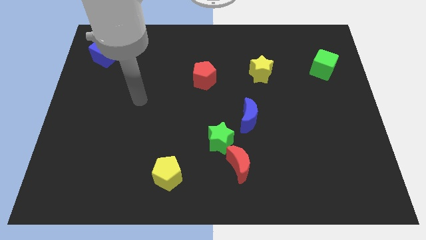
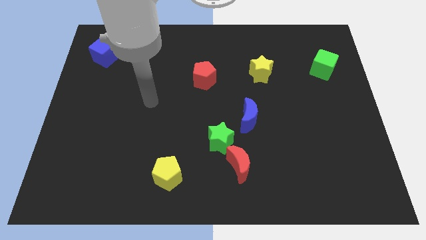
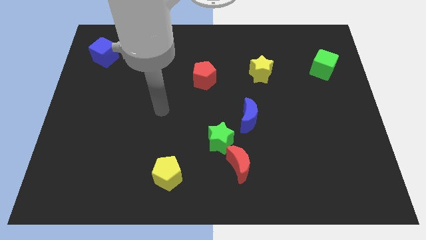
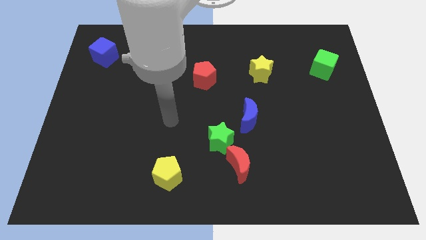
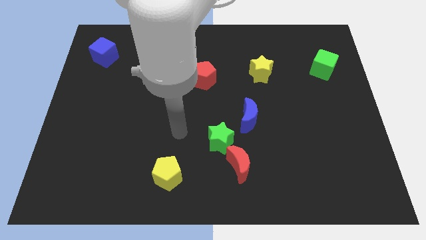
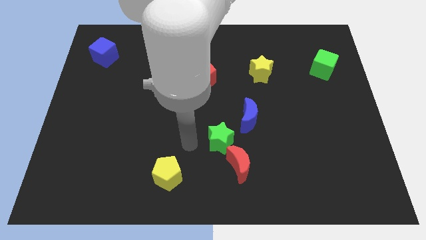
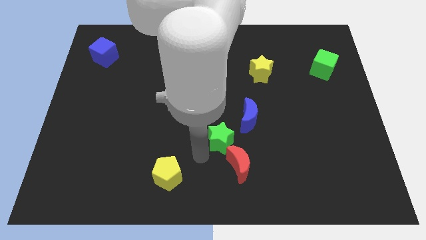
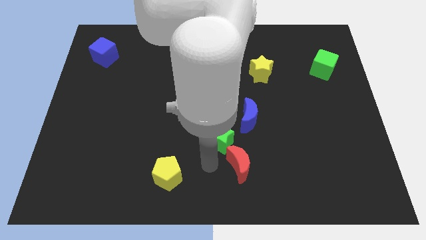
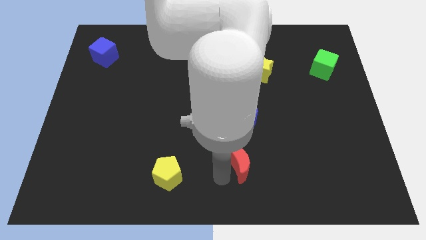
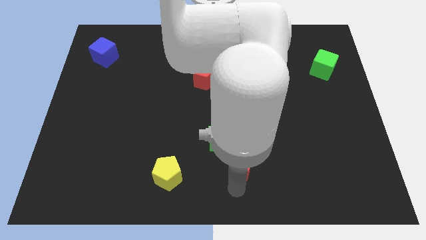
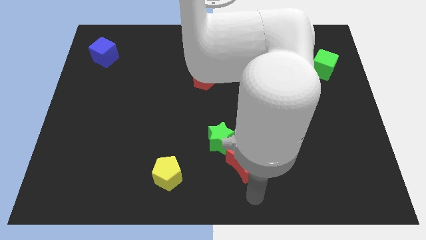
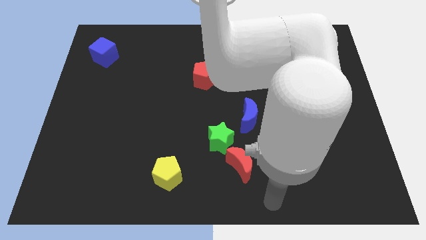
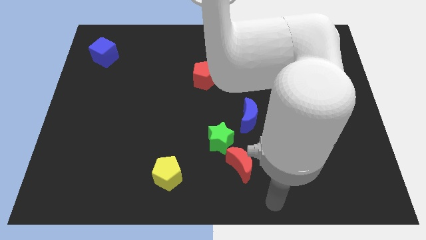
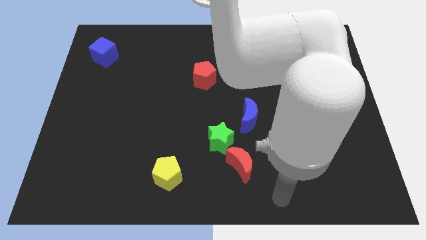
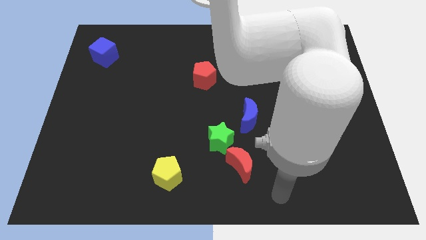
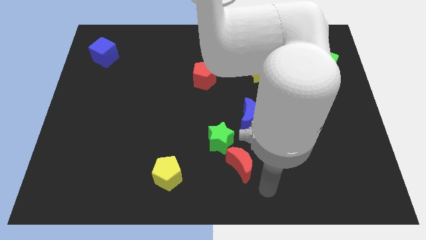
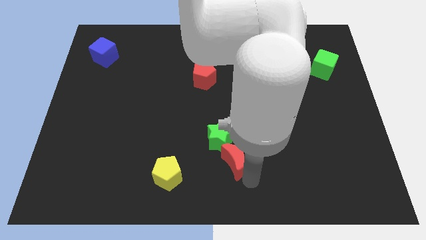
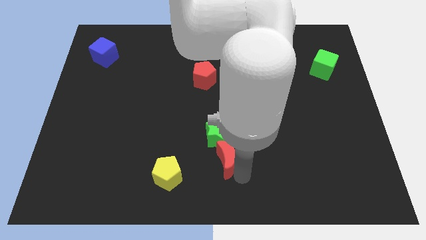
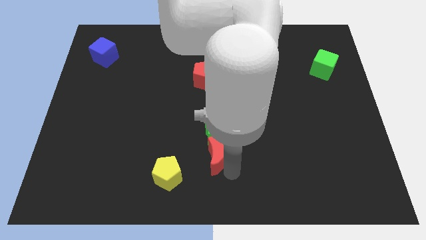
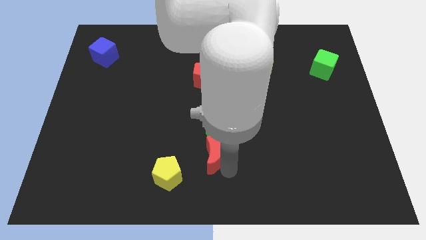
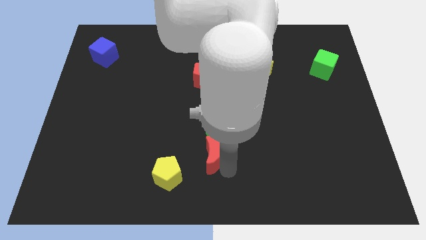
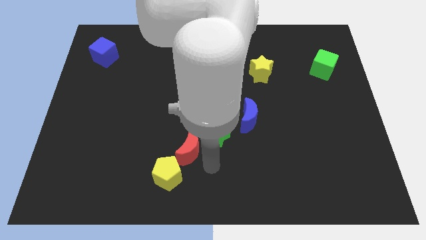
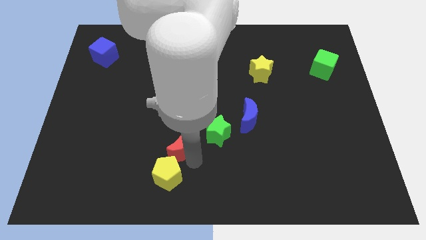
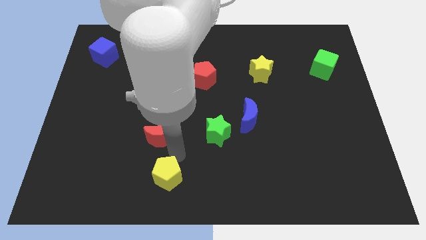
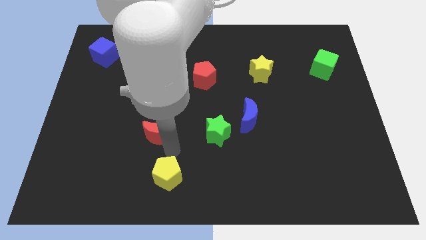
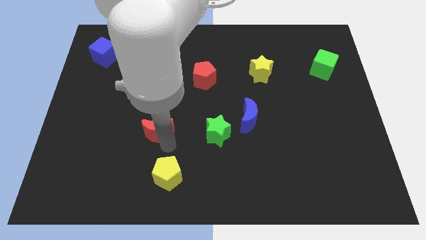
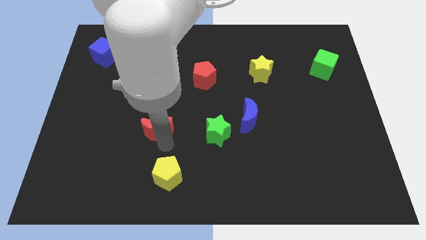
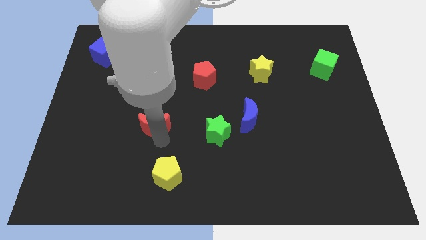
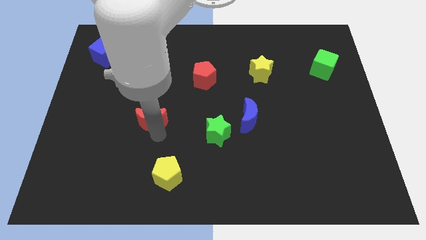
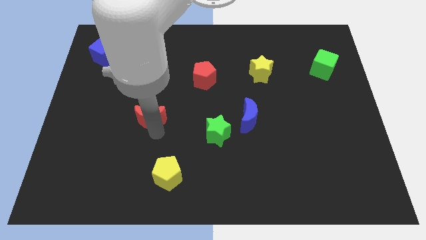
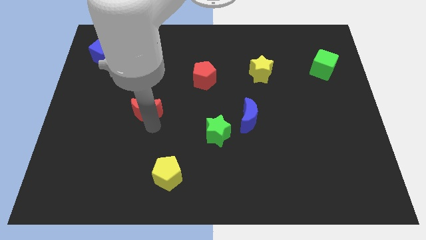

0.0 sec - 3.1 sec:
separate red moon and the green star

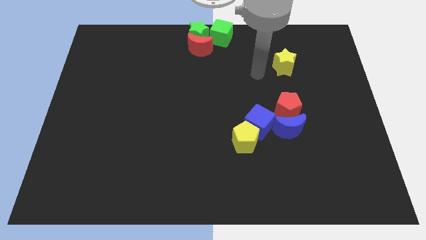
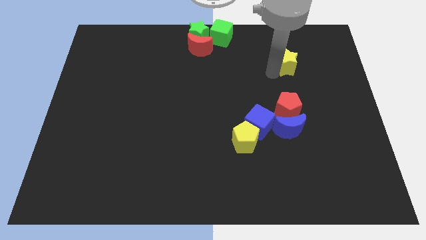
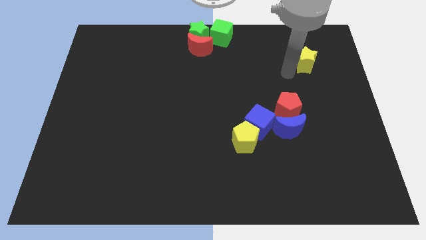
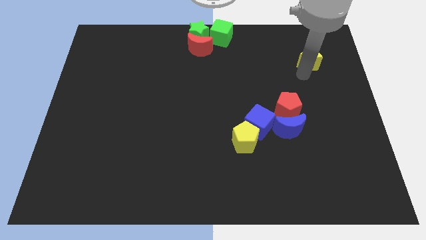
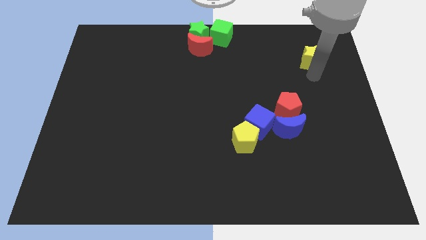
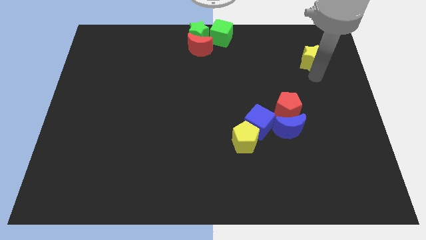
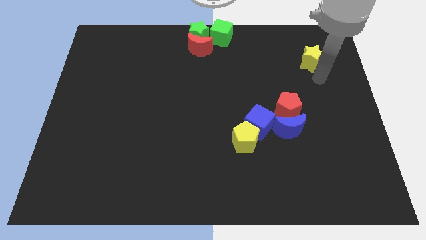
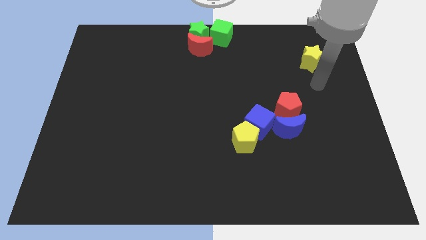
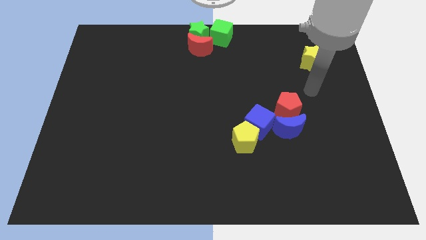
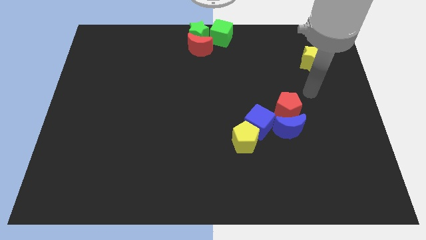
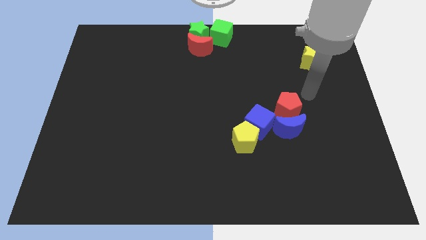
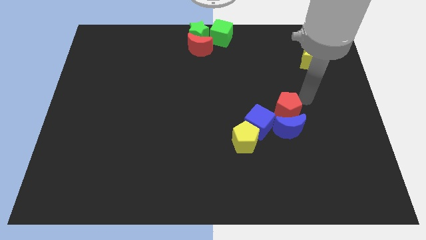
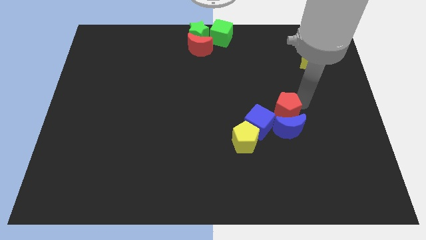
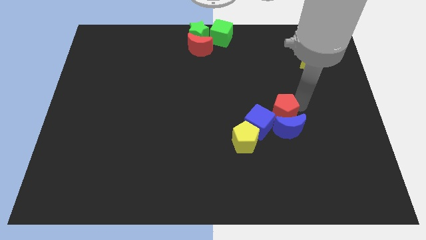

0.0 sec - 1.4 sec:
move the red pentagon to the center of the board

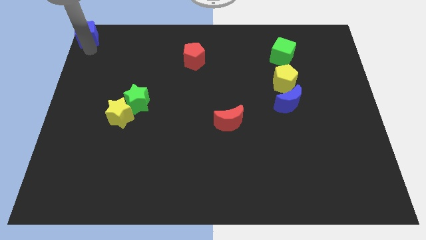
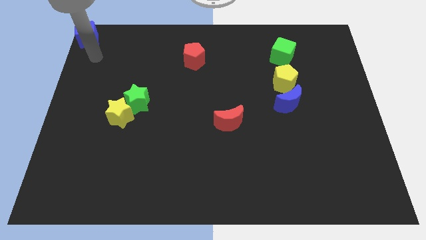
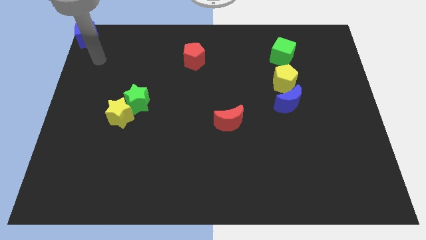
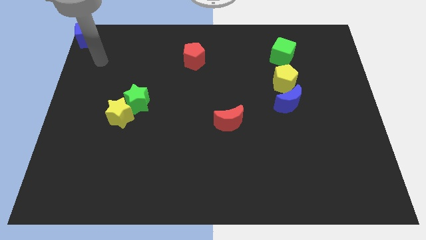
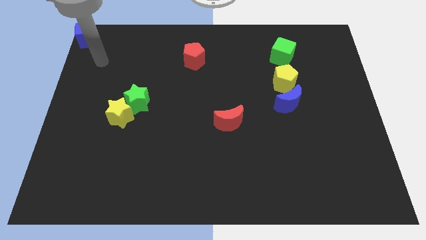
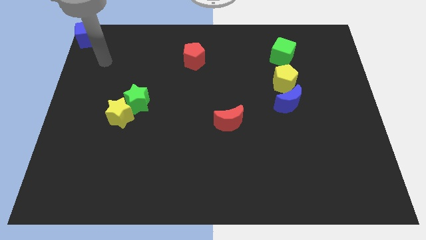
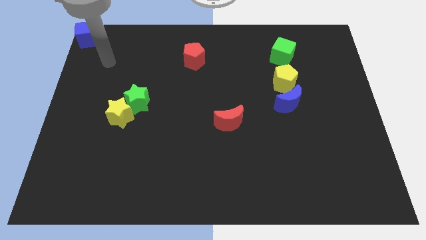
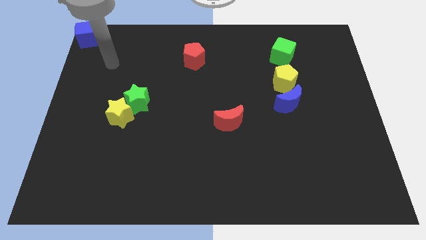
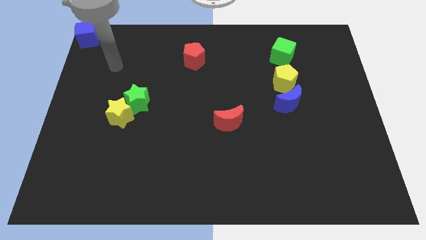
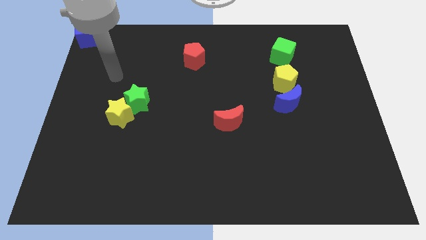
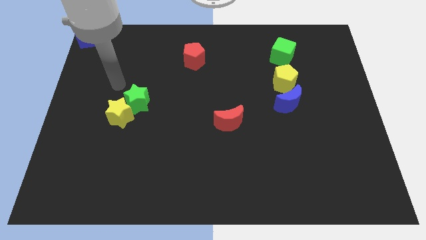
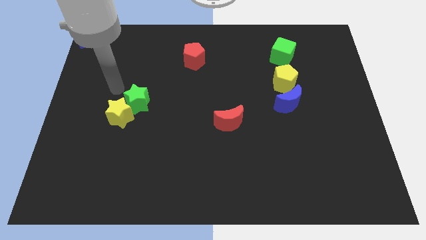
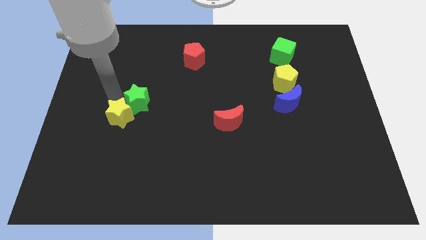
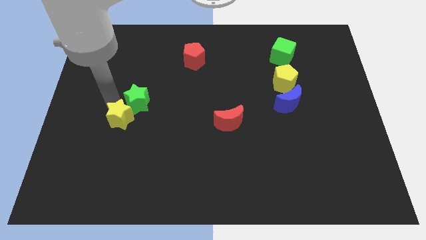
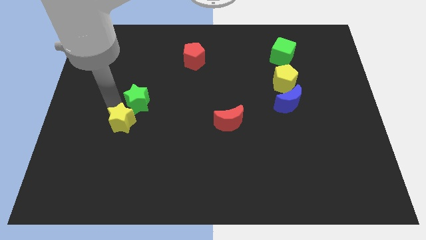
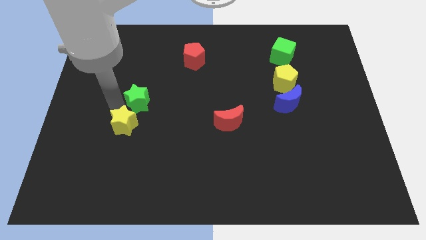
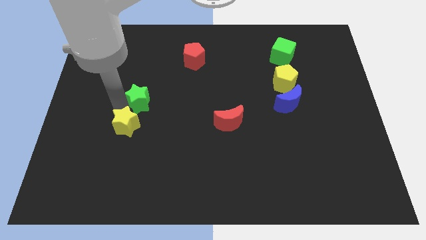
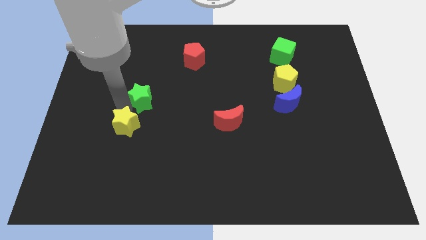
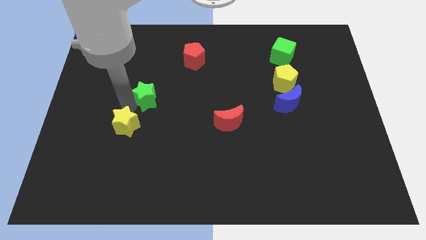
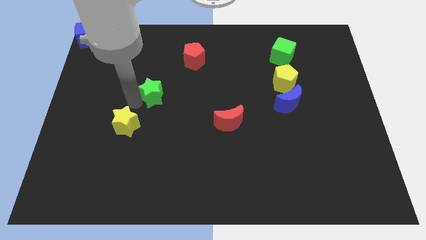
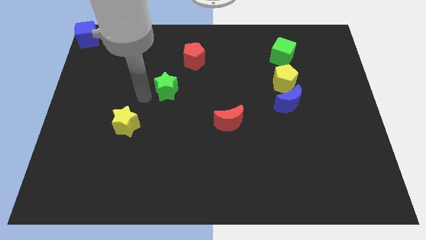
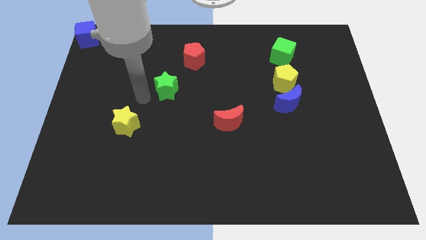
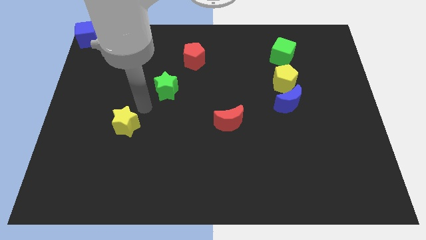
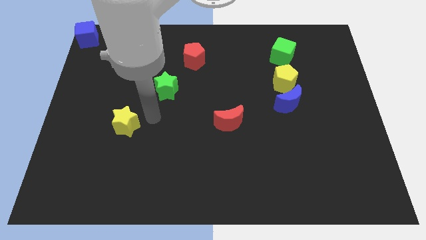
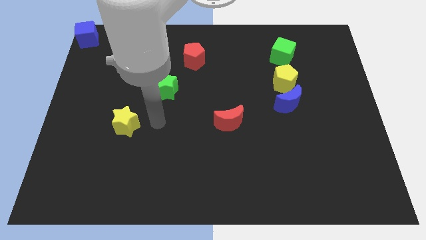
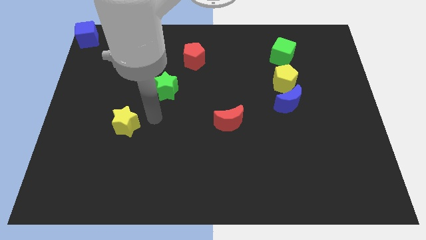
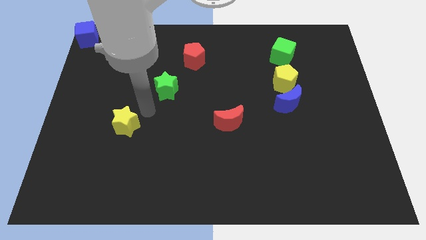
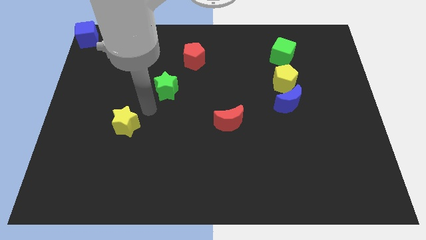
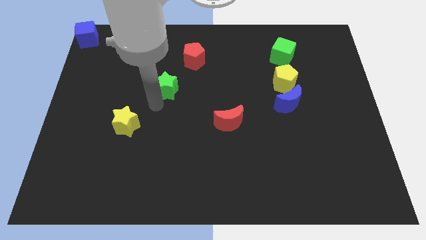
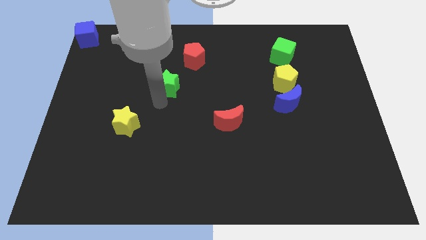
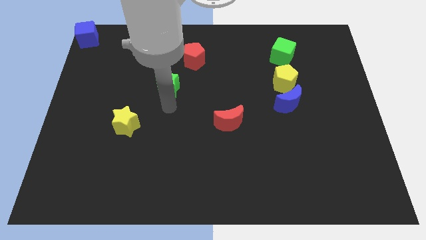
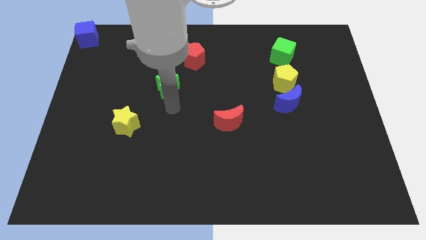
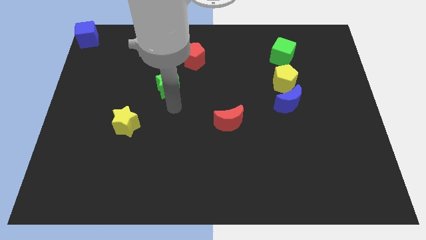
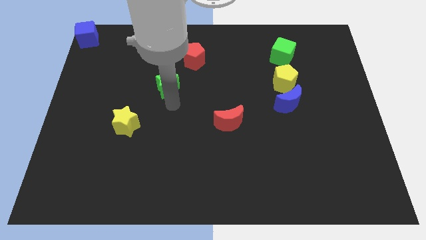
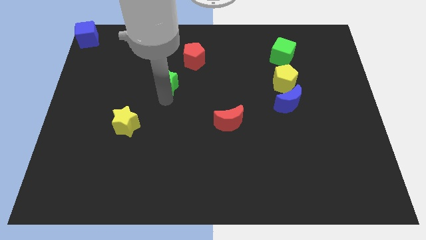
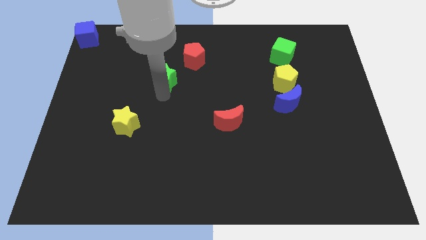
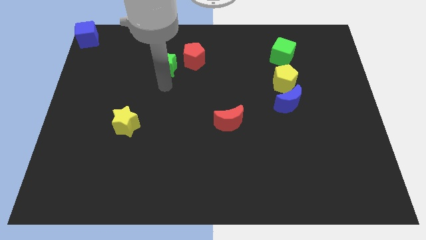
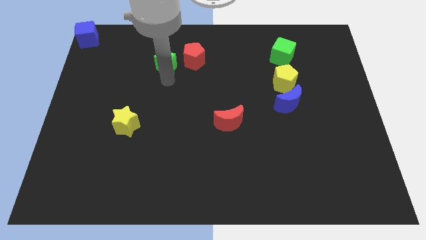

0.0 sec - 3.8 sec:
separate the yellow star and green star

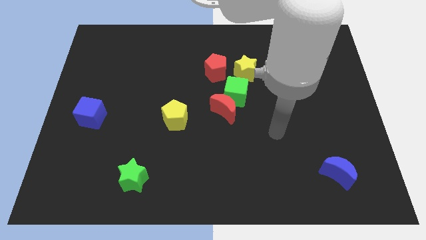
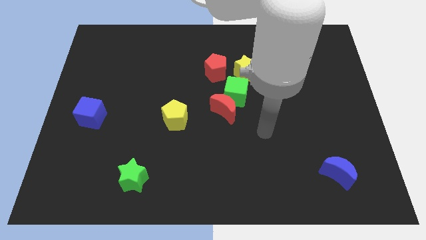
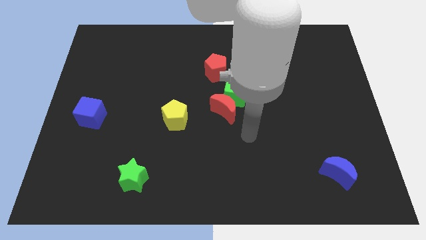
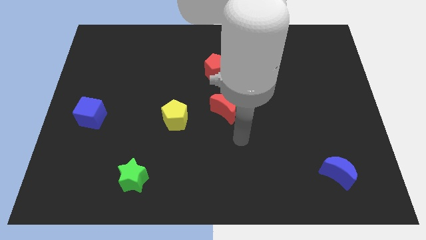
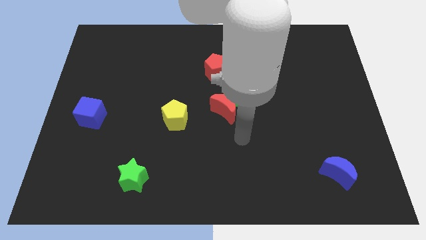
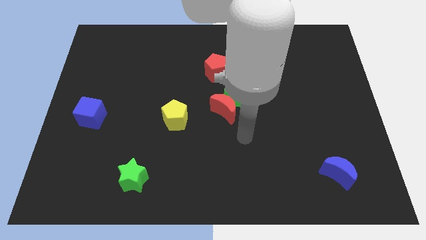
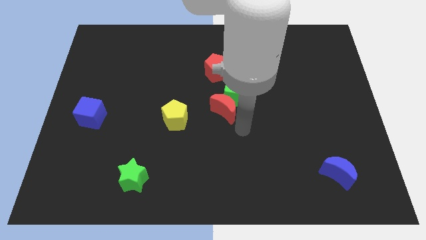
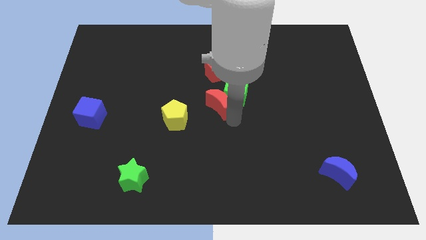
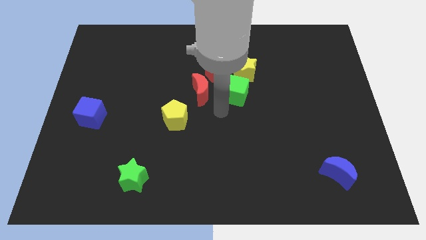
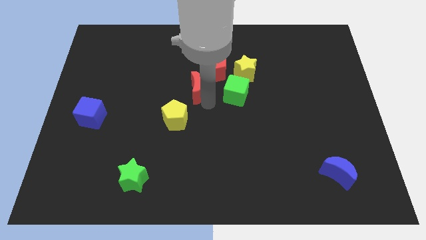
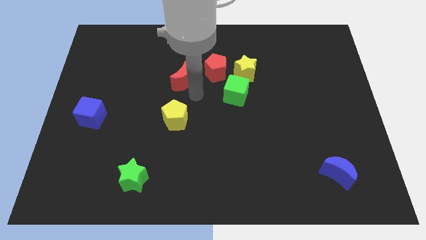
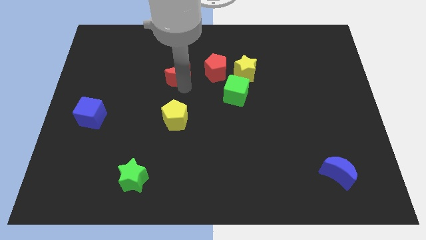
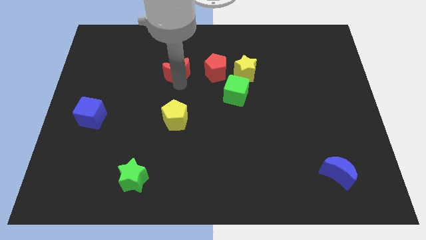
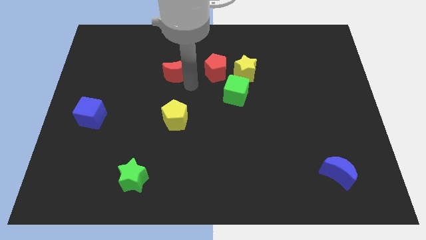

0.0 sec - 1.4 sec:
push the red moon to the left side of the red pentagon
